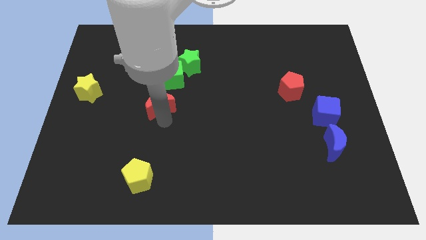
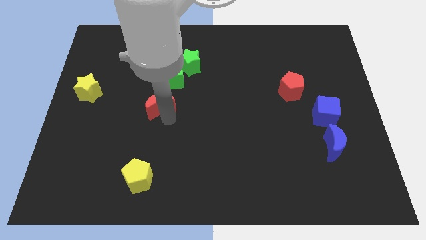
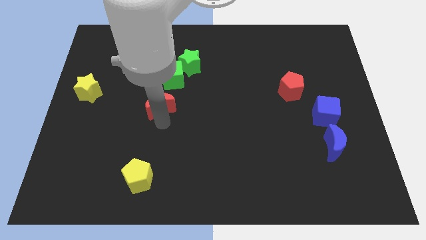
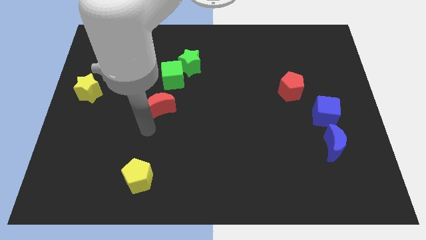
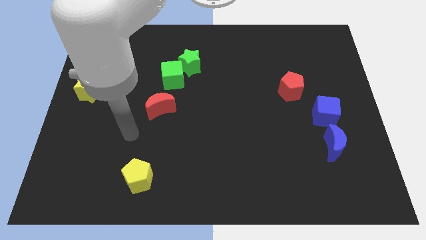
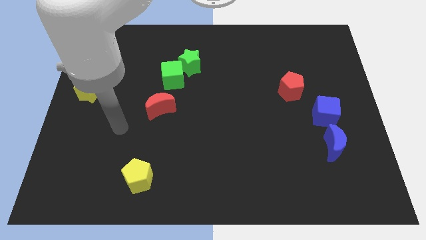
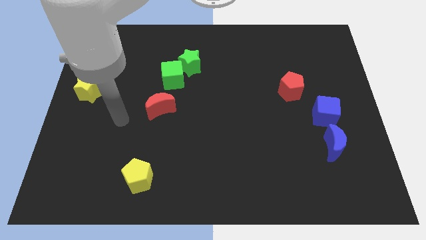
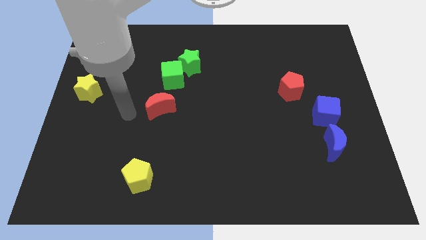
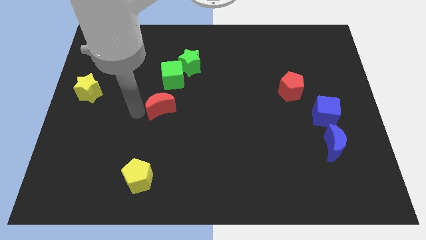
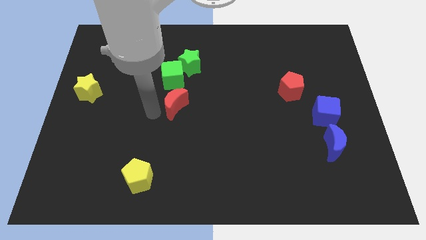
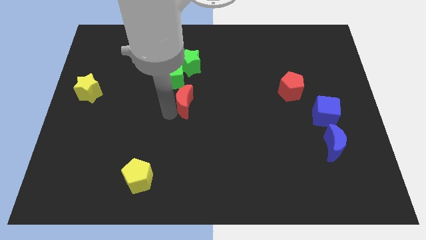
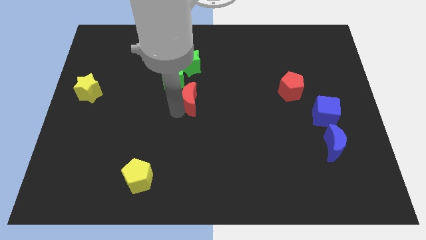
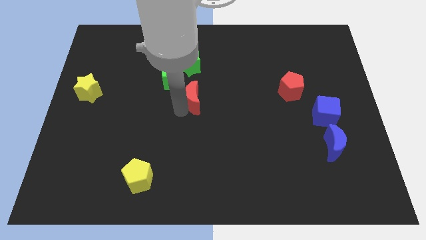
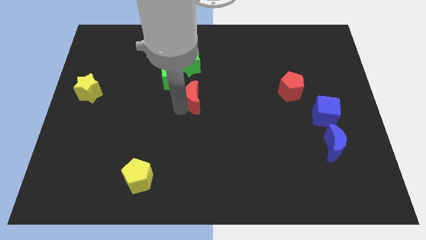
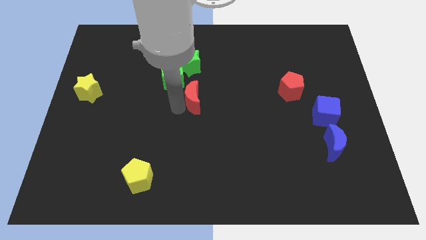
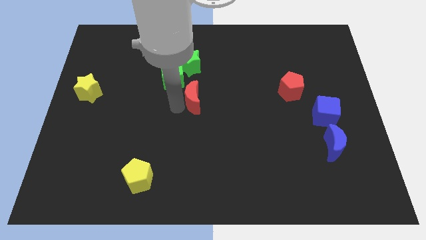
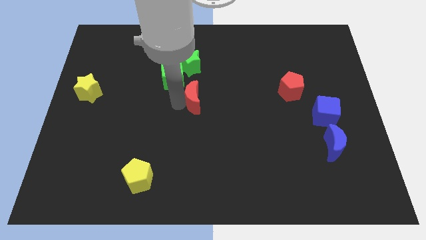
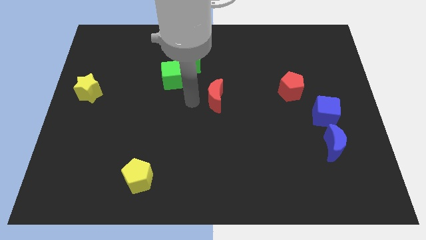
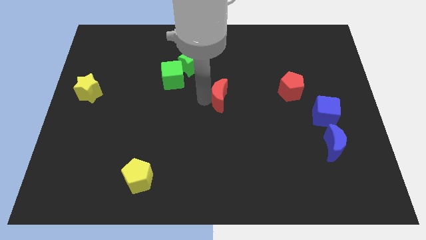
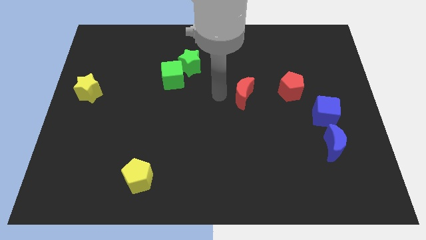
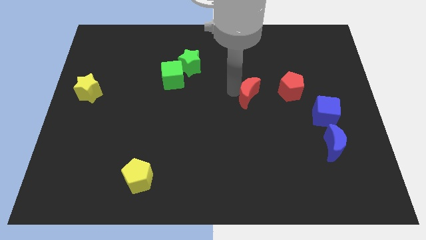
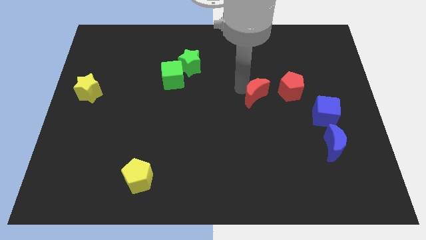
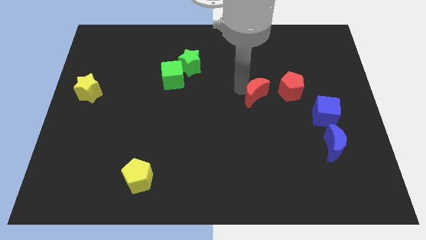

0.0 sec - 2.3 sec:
move the red crescent to the left of the red pentagon

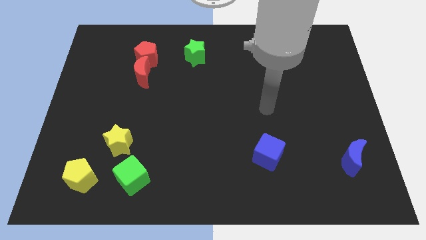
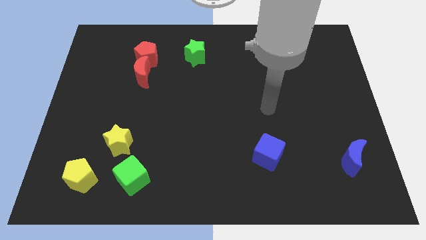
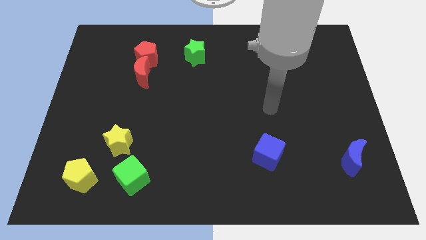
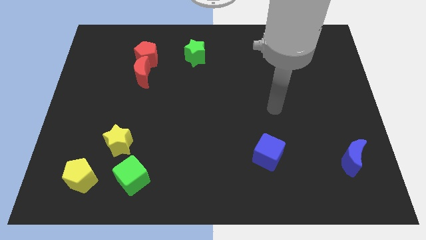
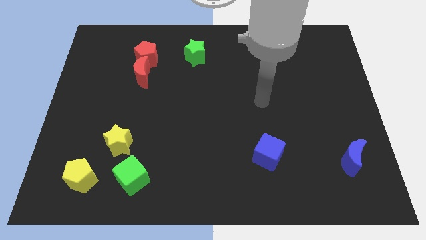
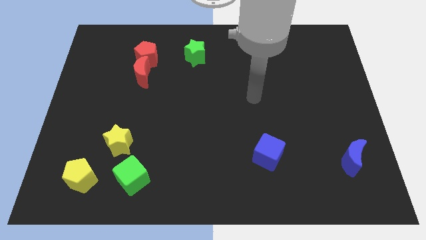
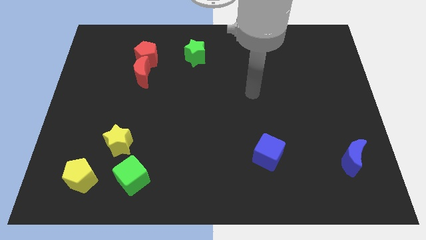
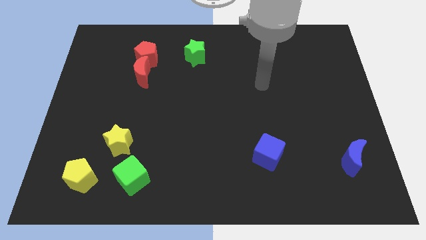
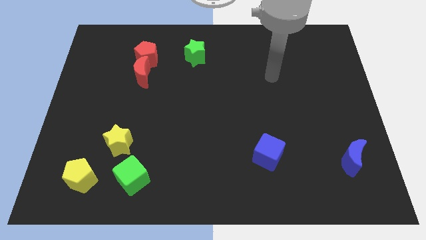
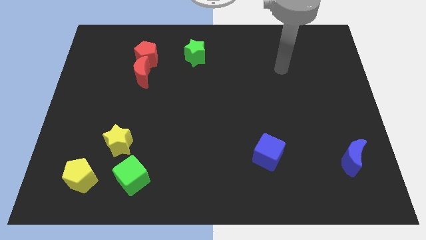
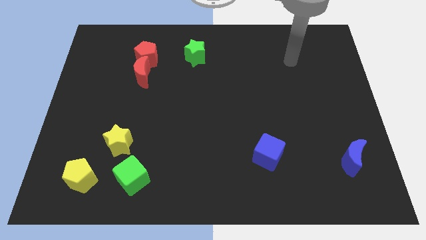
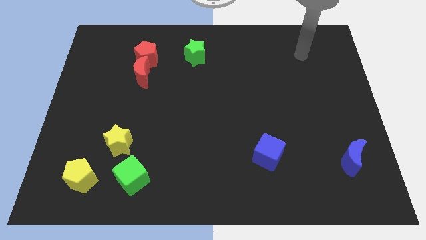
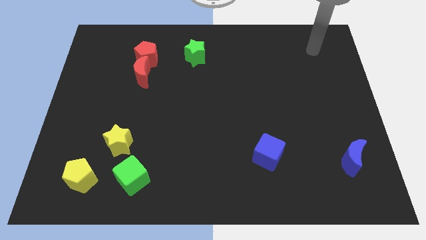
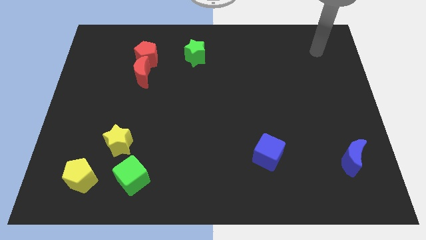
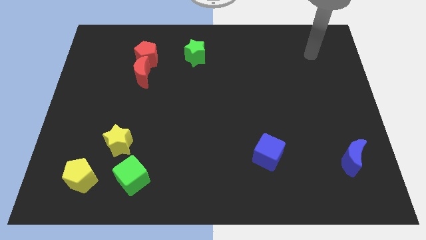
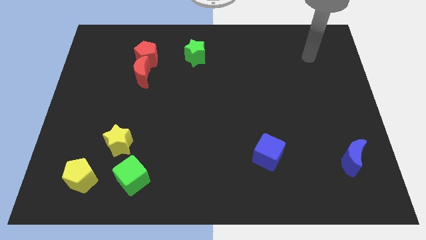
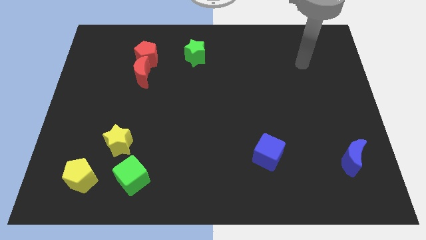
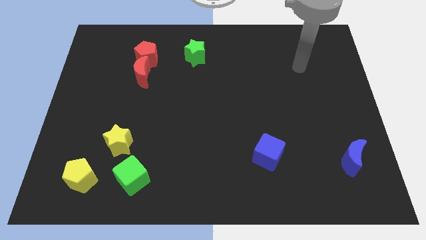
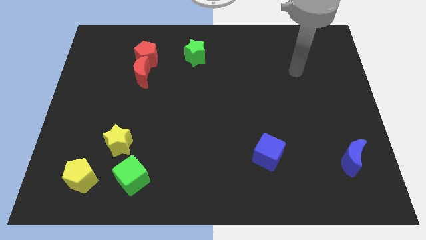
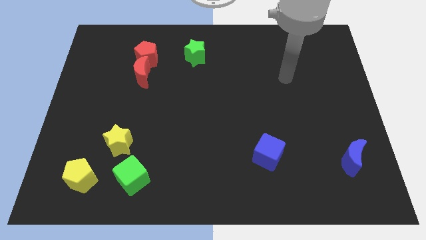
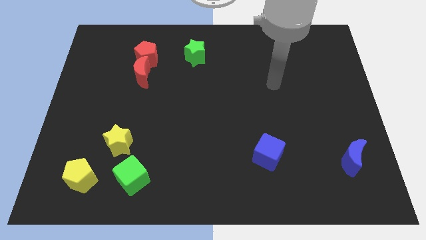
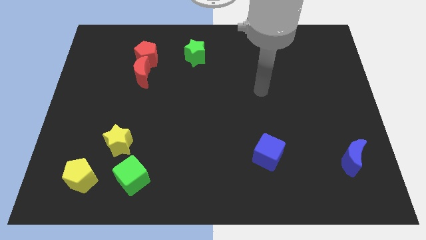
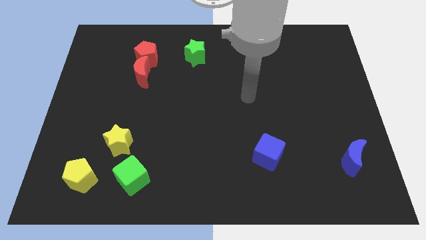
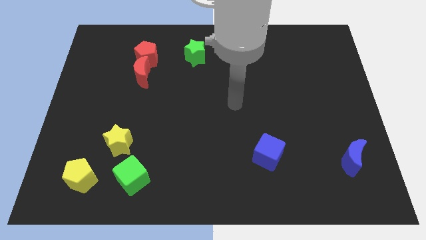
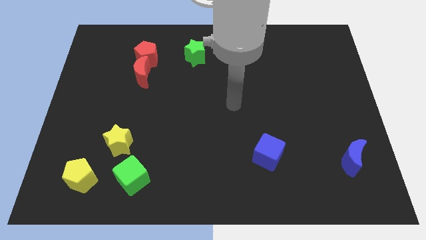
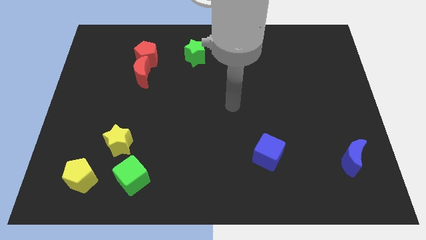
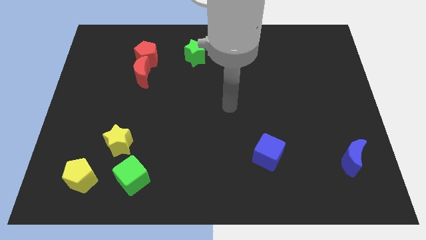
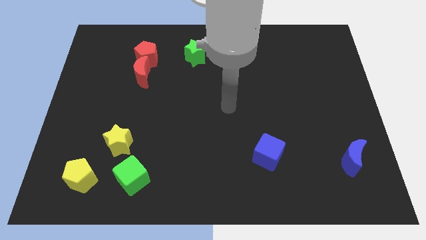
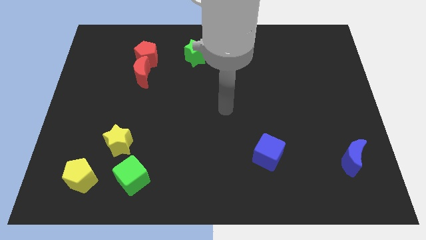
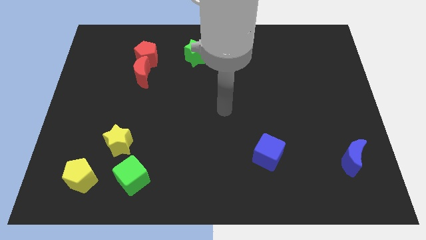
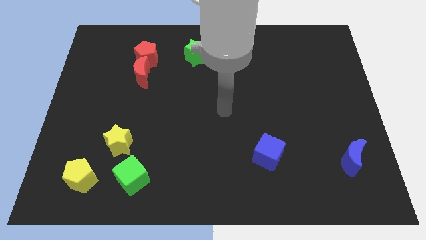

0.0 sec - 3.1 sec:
move your arm and point towards the center

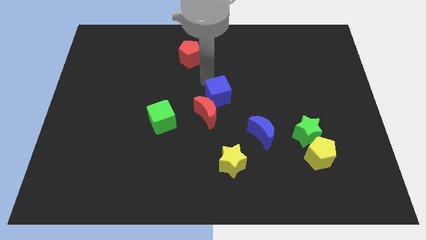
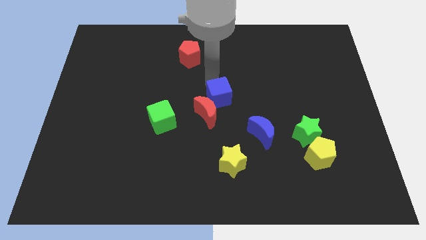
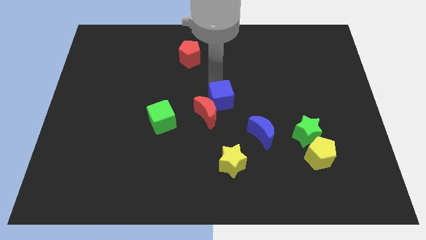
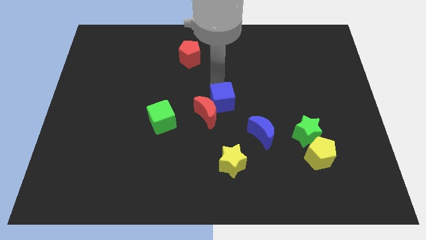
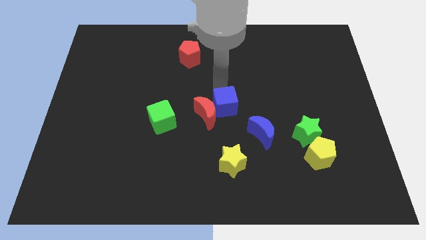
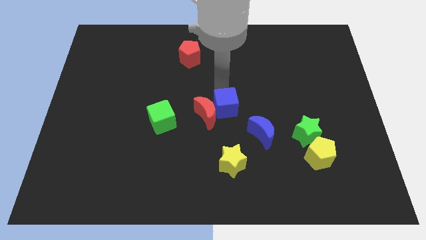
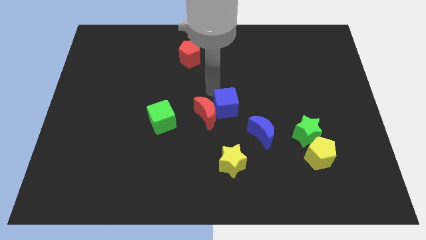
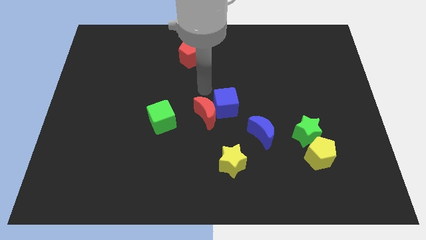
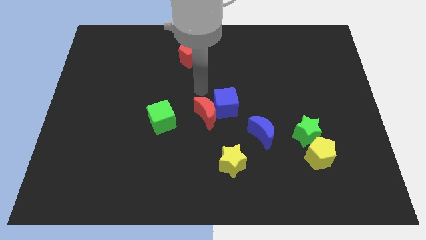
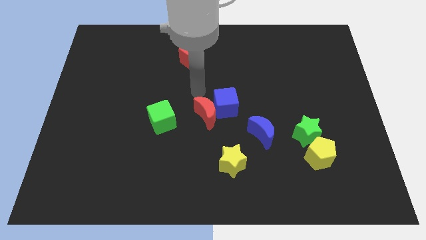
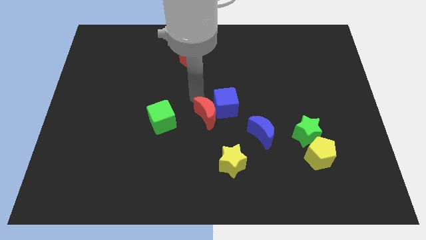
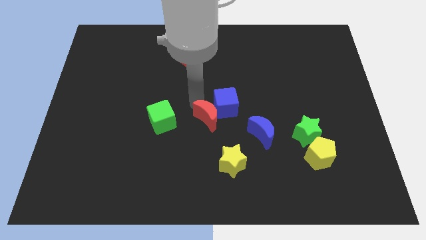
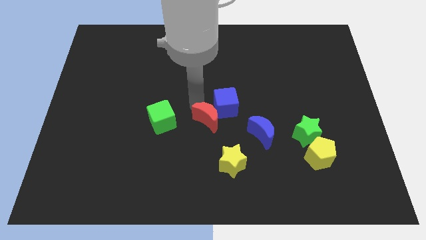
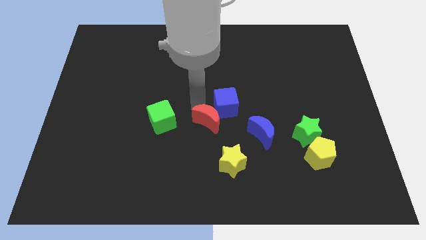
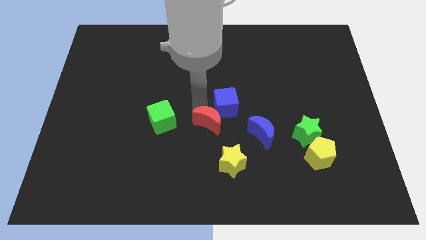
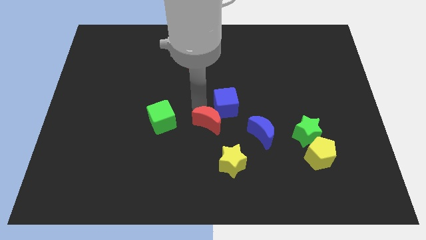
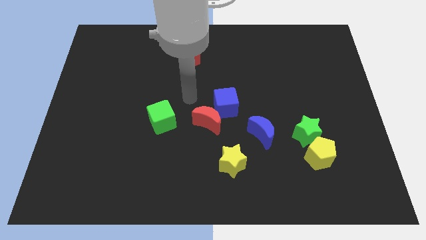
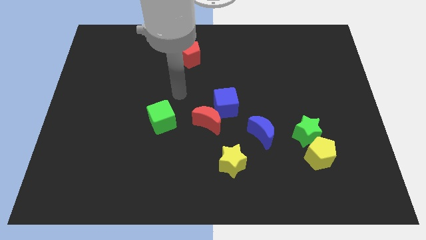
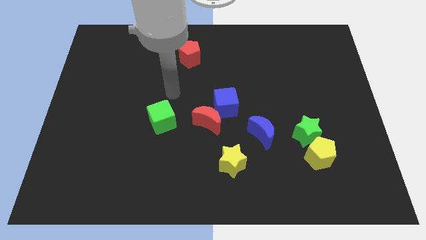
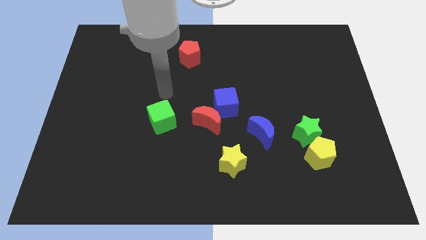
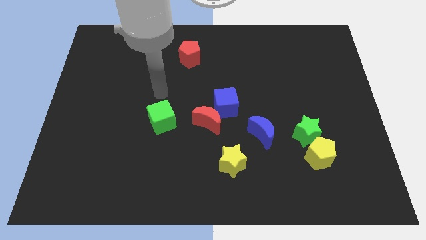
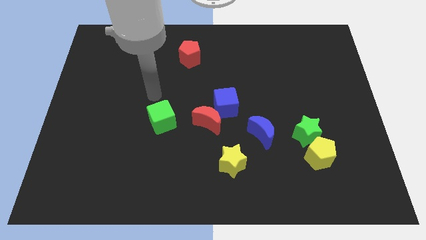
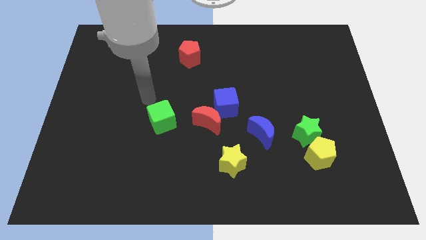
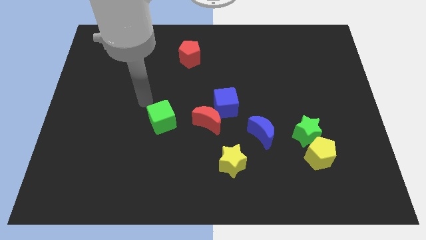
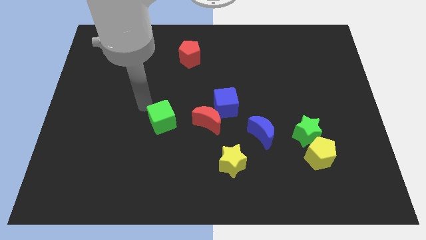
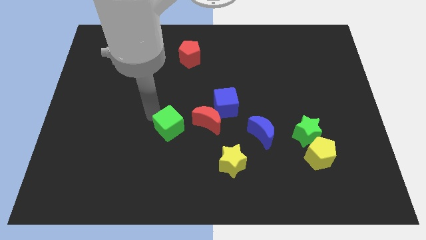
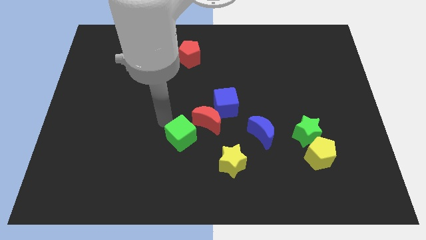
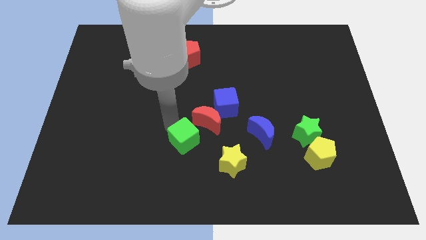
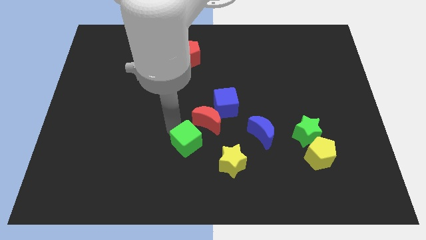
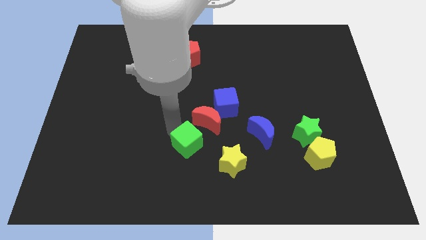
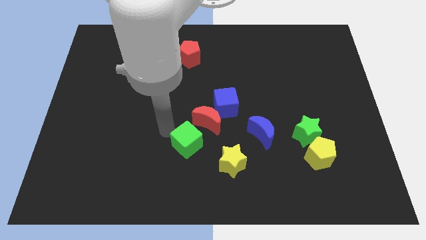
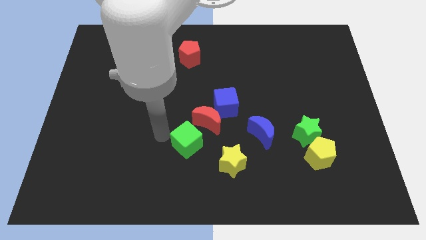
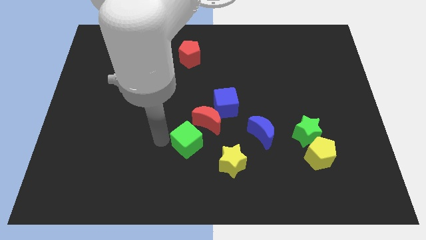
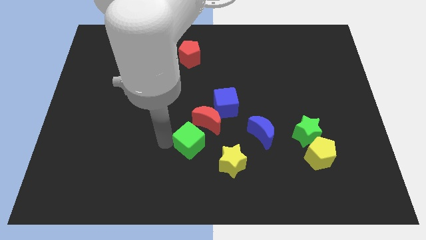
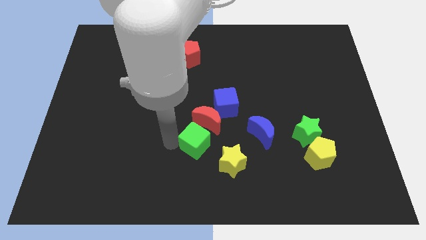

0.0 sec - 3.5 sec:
move green cube to the bottom of red crescent
